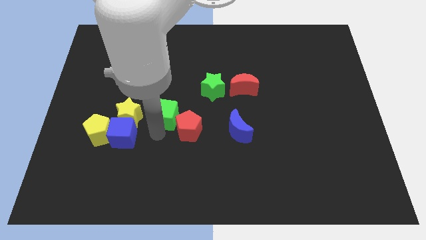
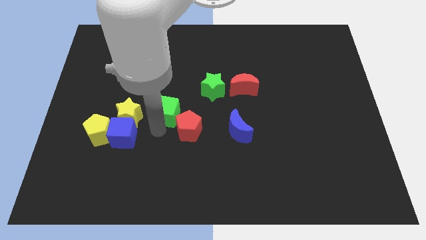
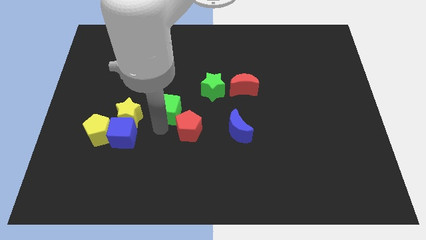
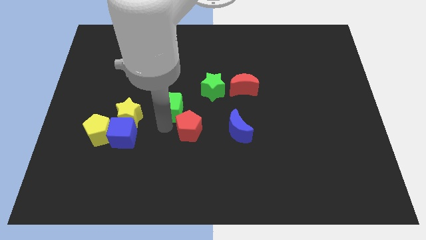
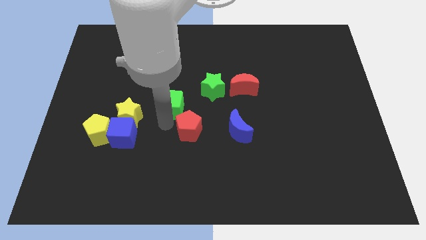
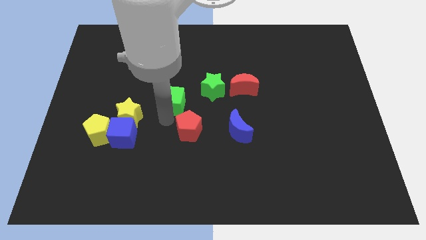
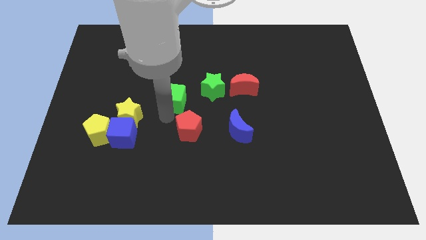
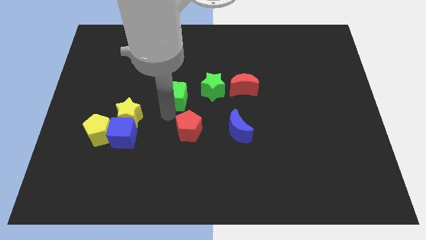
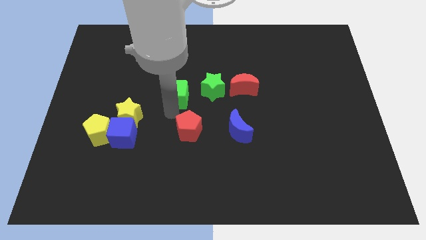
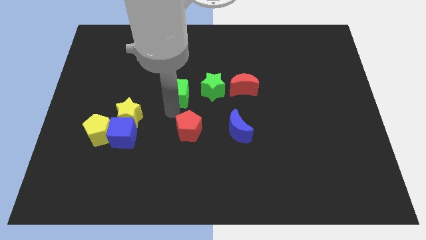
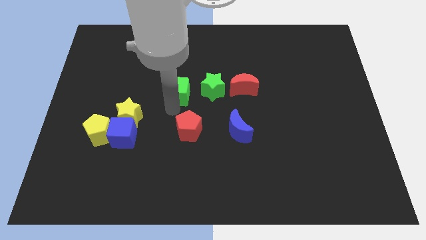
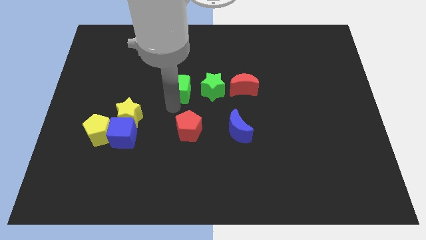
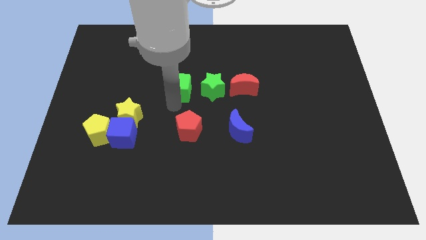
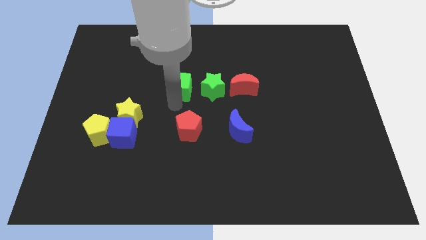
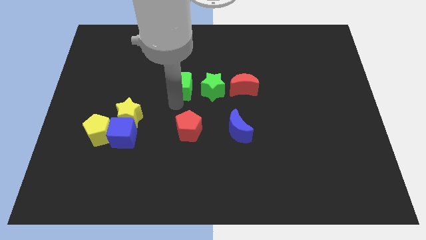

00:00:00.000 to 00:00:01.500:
take the green cube to the left side of the green star

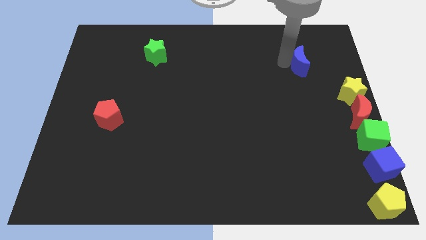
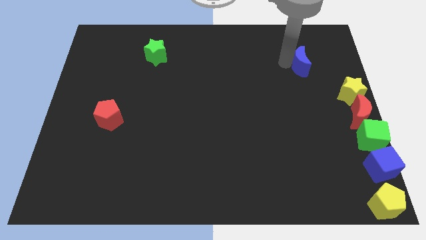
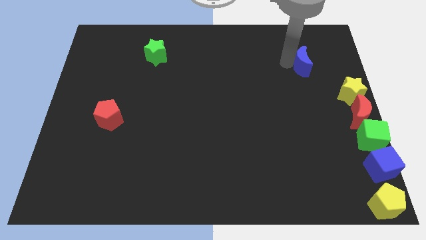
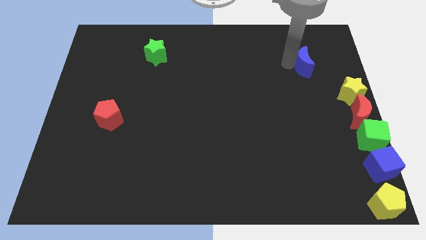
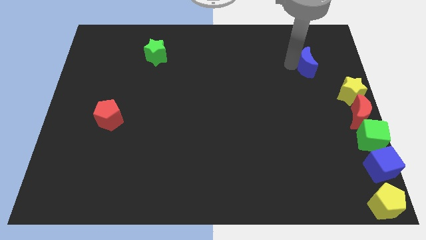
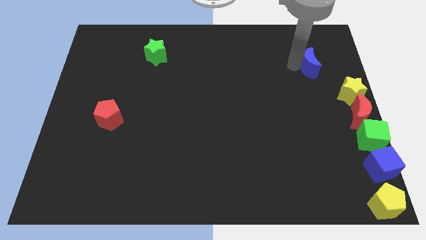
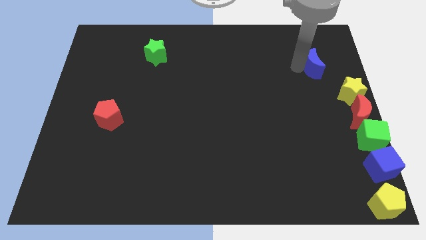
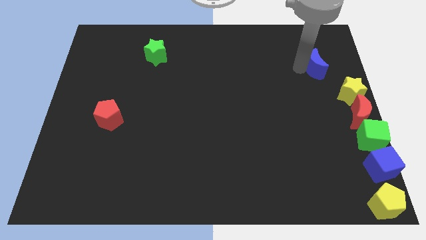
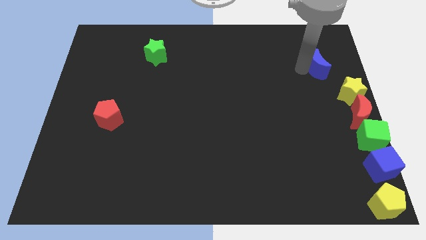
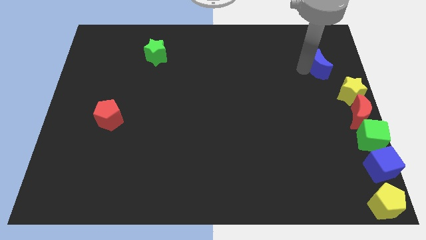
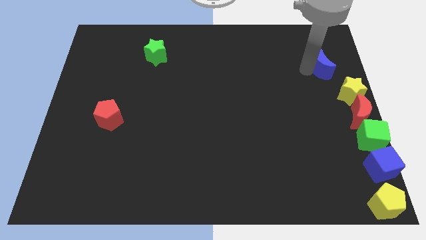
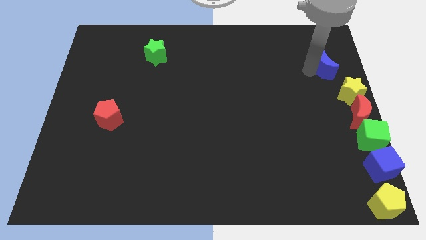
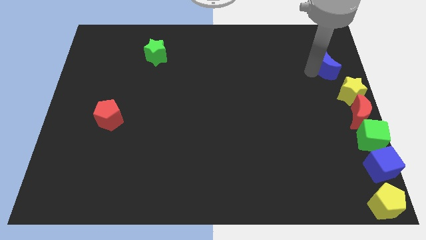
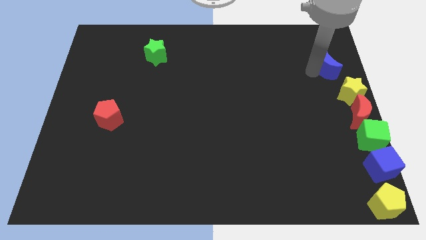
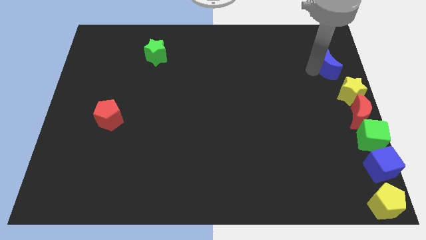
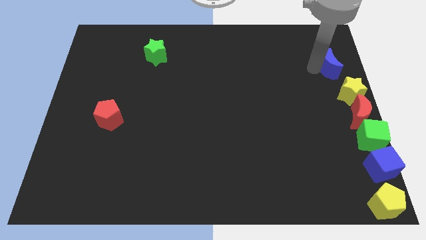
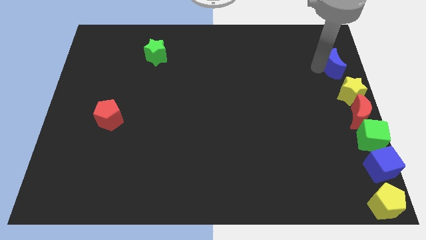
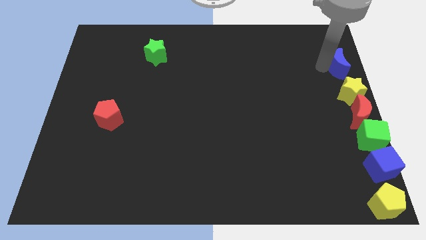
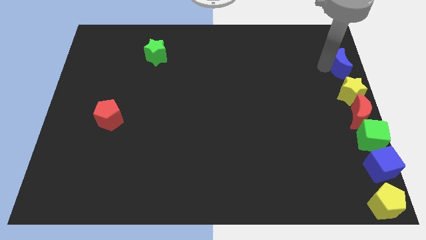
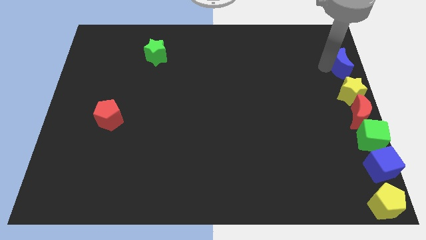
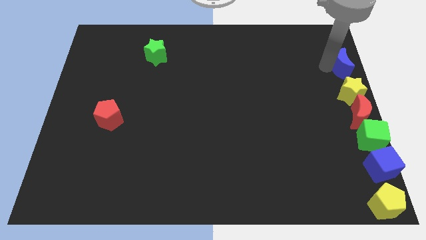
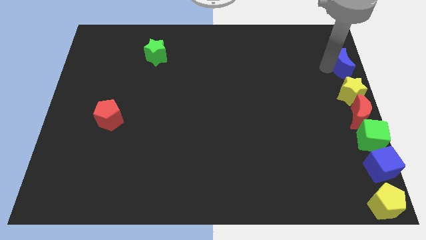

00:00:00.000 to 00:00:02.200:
place the blue moon above the yellow star

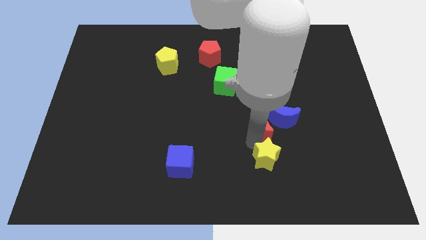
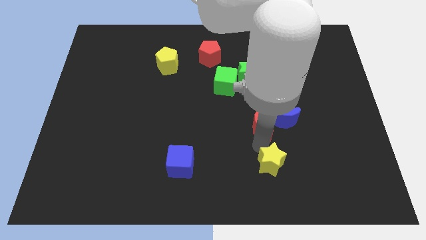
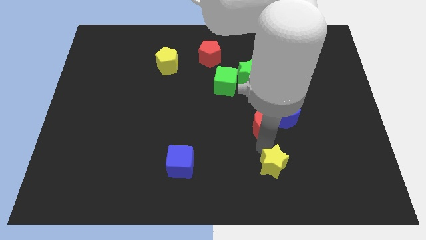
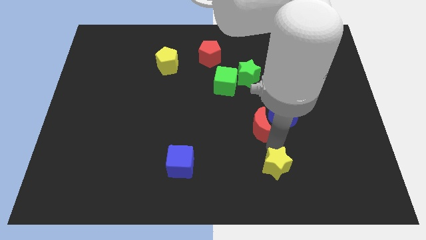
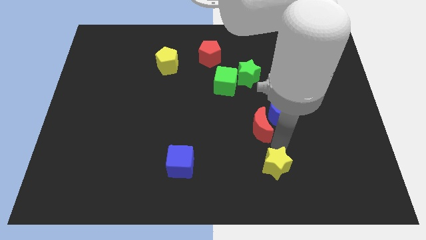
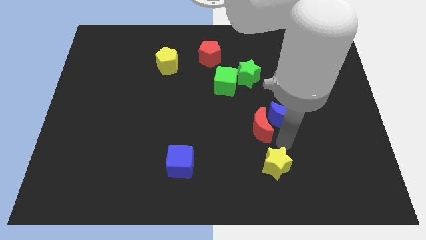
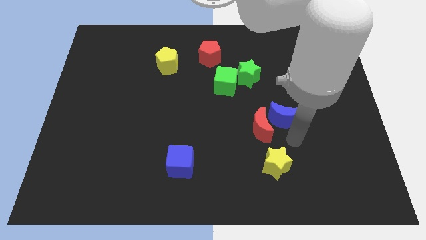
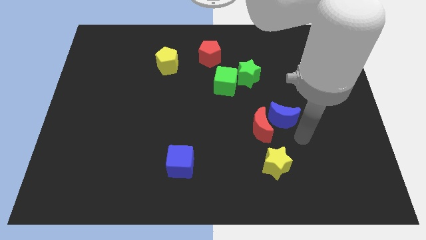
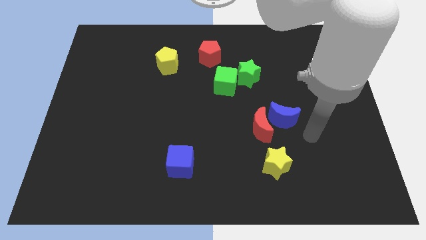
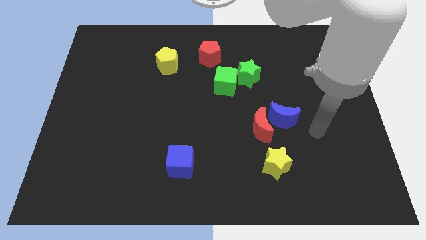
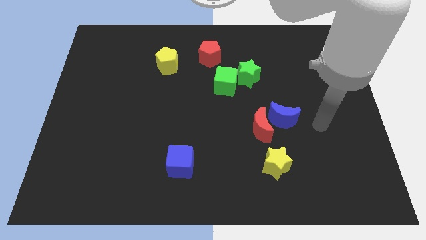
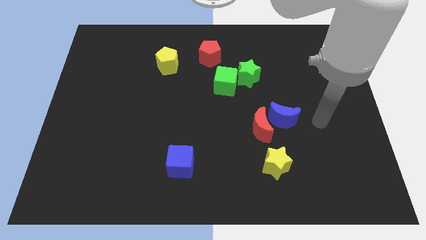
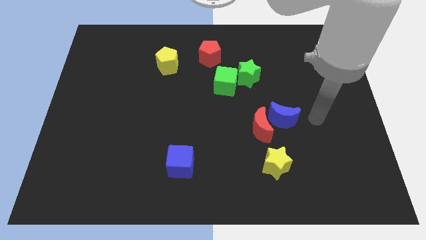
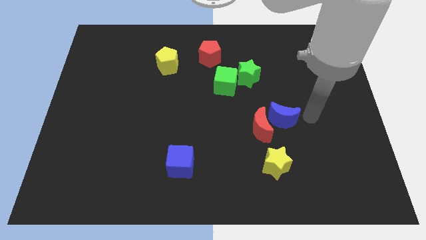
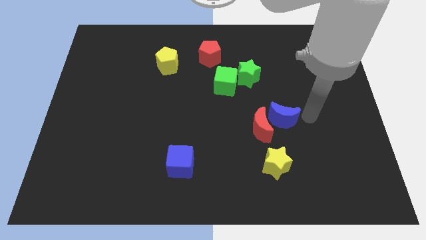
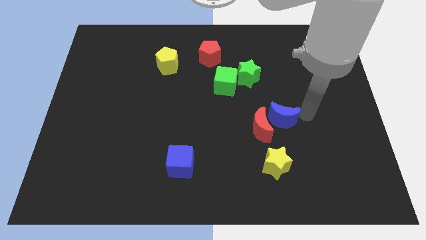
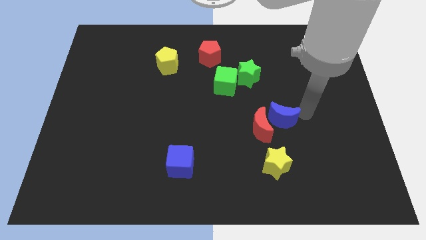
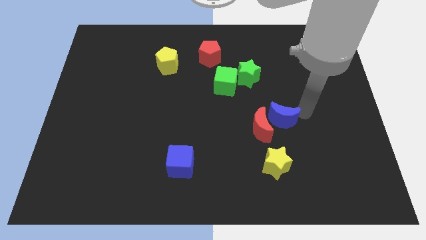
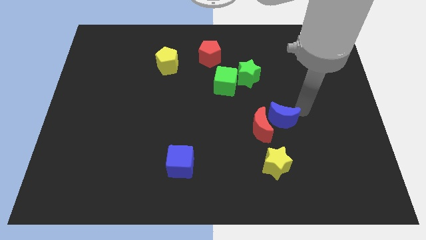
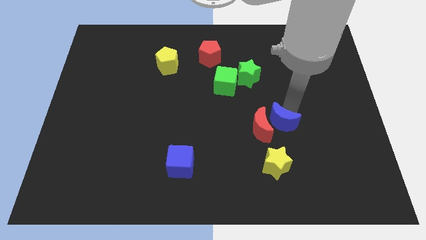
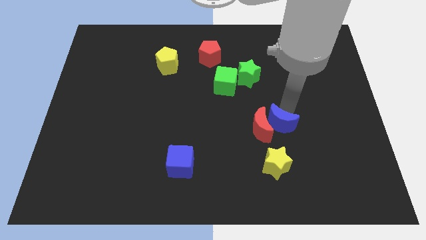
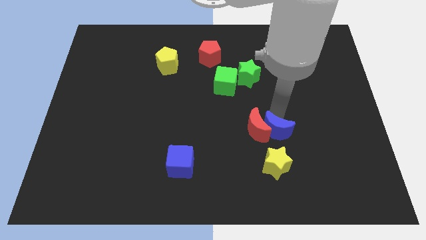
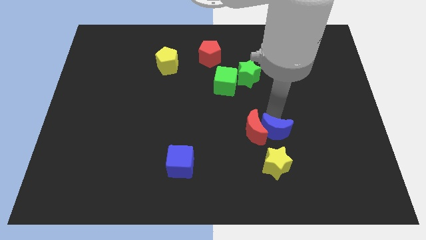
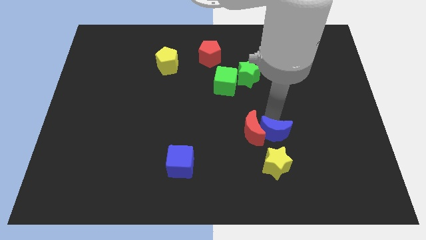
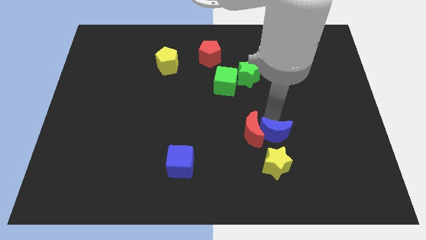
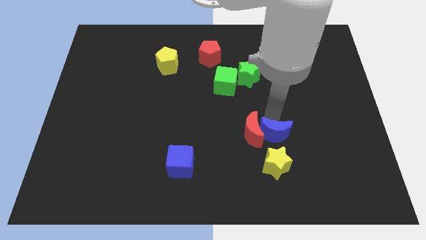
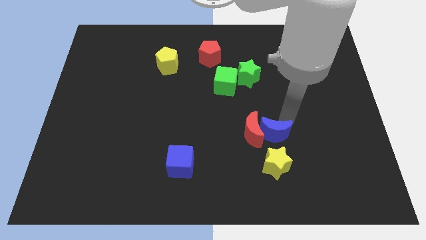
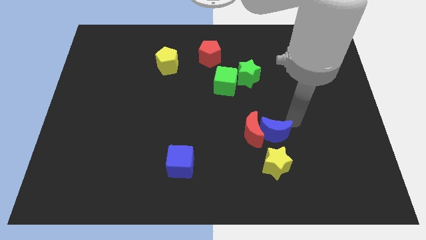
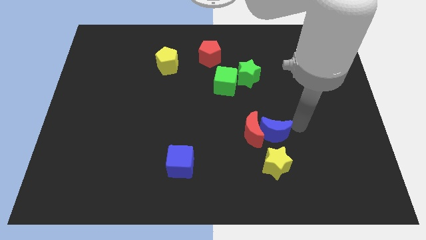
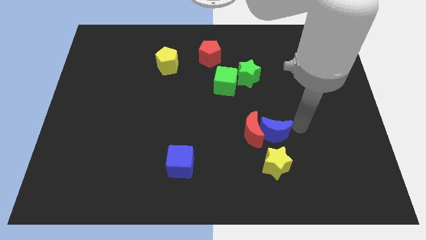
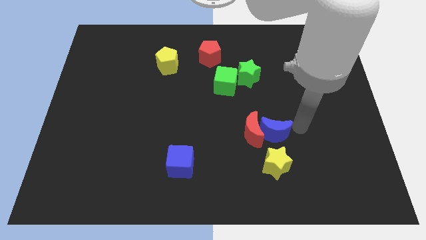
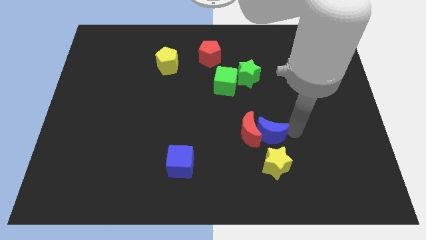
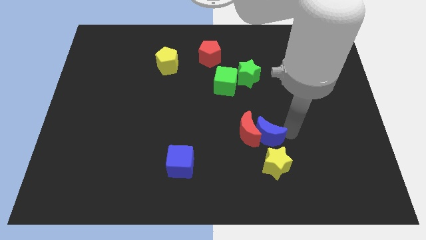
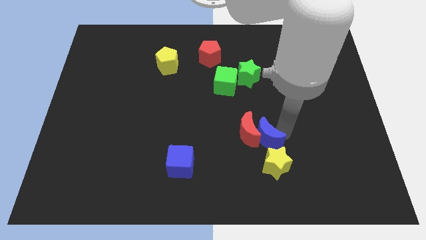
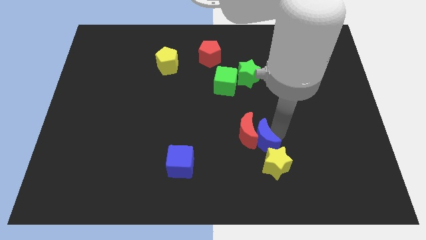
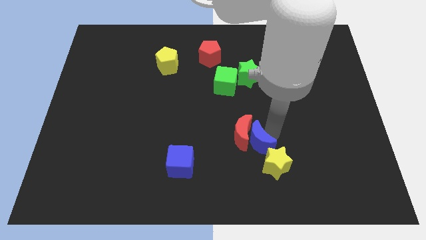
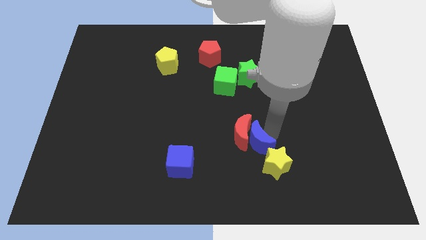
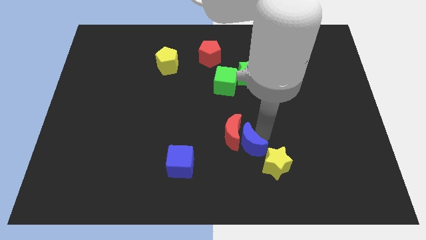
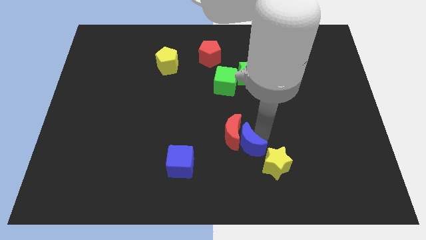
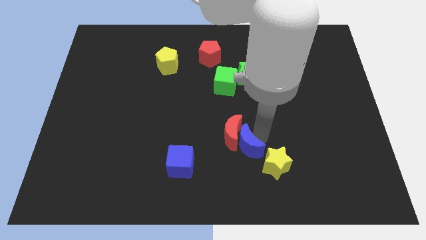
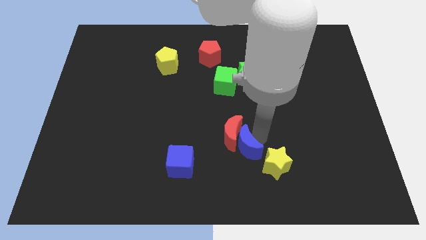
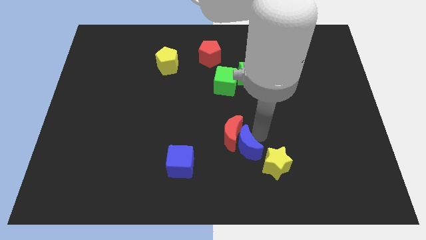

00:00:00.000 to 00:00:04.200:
push the blue moon into the red moon

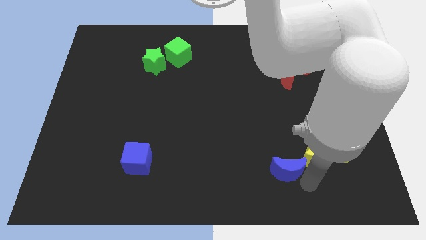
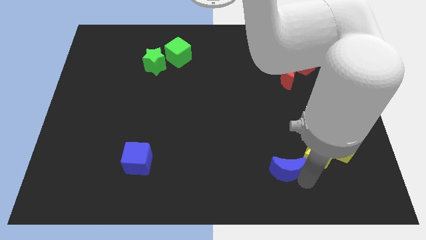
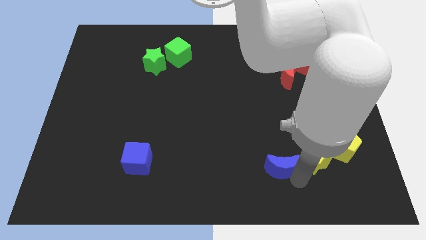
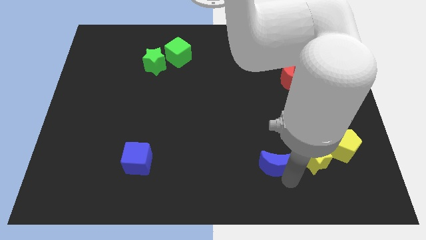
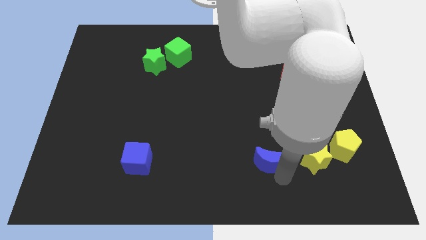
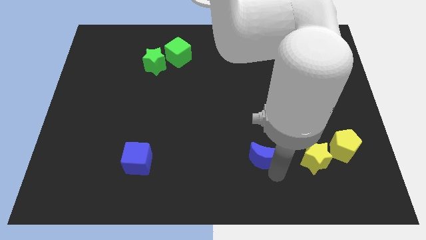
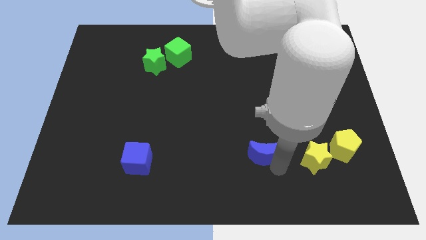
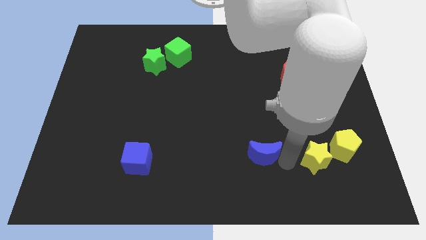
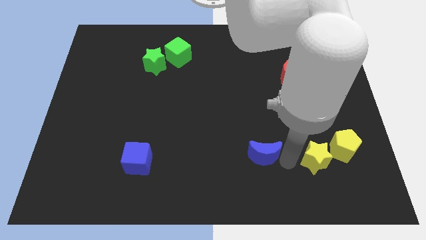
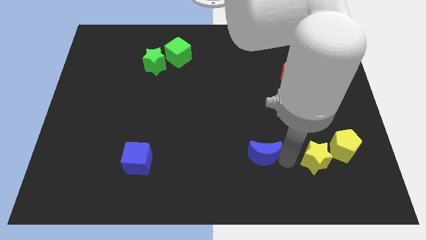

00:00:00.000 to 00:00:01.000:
place the blue crescent parallel left to yellow star

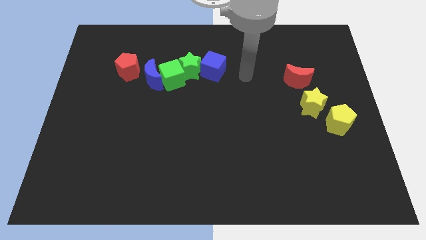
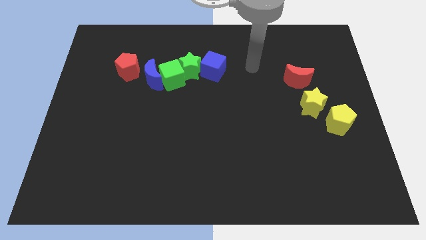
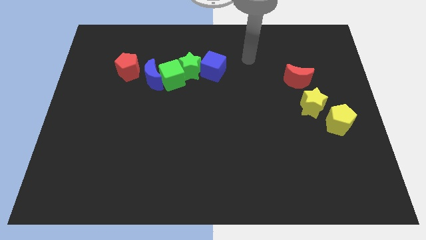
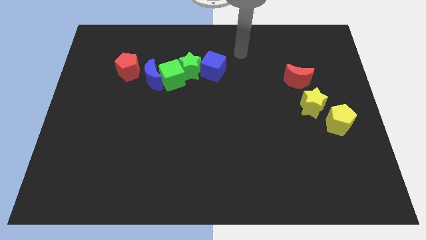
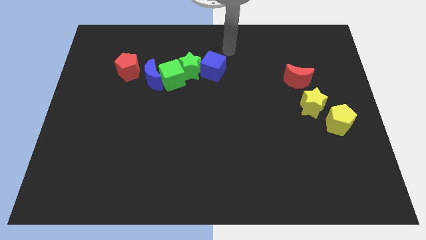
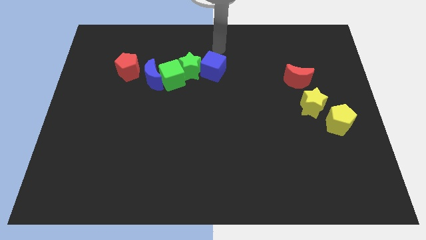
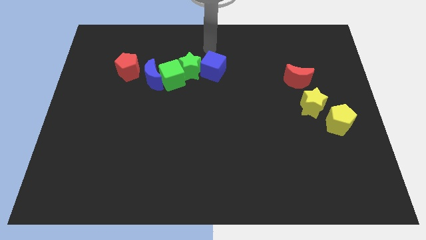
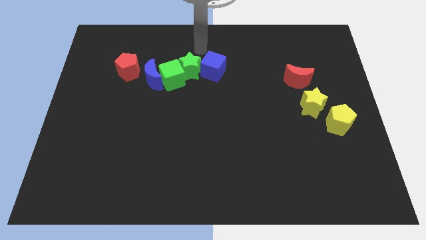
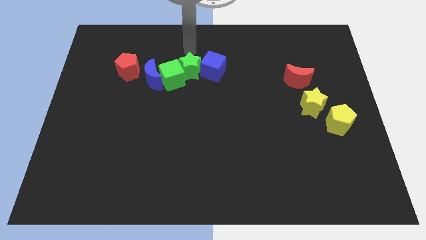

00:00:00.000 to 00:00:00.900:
place your arm above the green star
